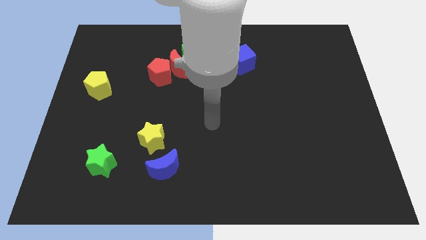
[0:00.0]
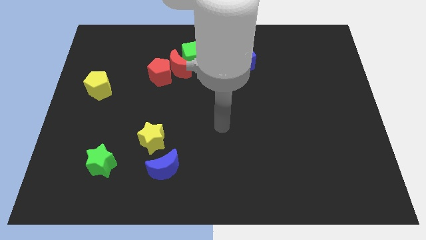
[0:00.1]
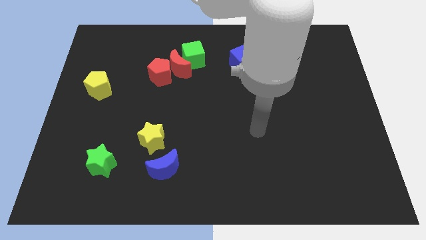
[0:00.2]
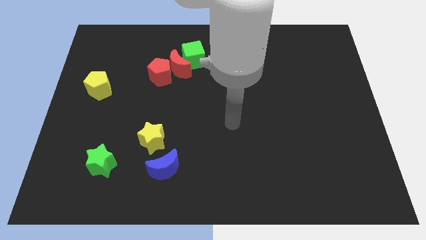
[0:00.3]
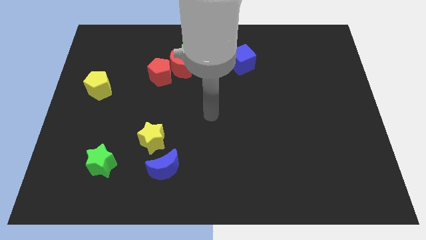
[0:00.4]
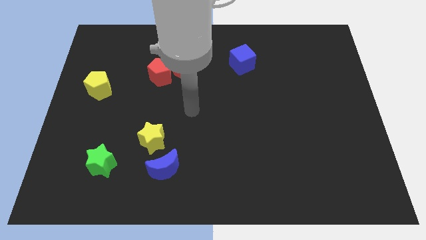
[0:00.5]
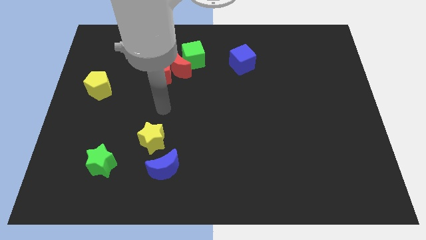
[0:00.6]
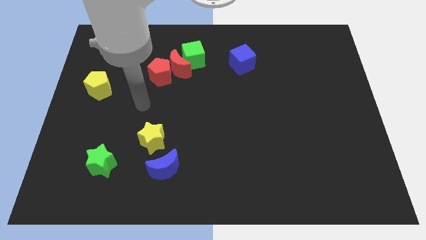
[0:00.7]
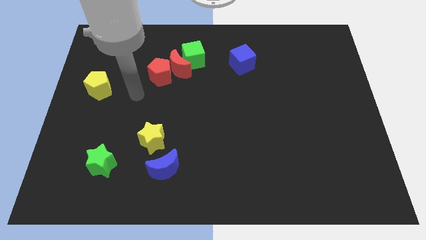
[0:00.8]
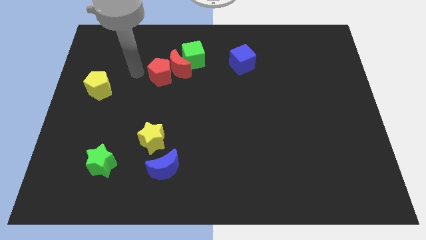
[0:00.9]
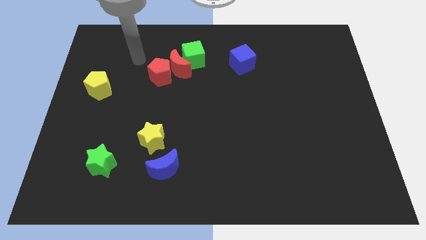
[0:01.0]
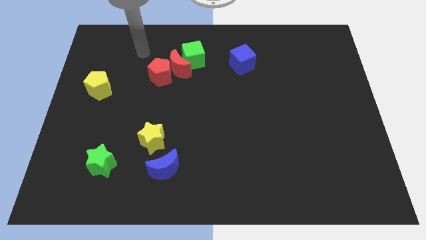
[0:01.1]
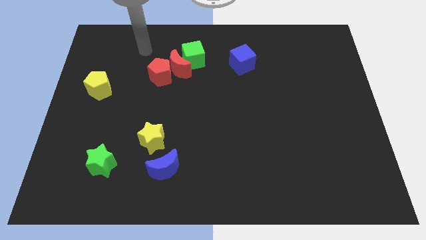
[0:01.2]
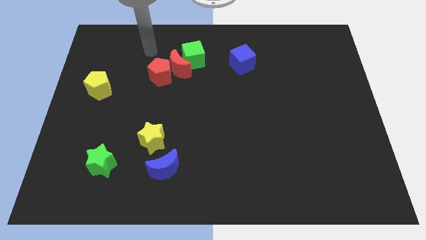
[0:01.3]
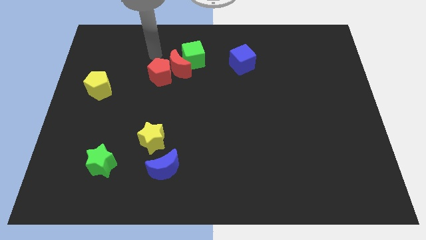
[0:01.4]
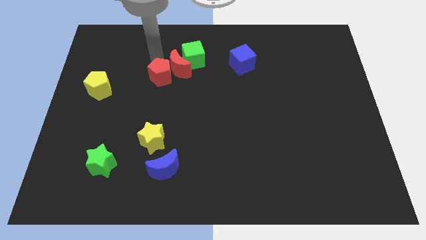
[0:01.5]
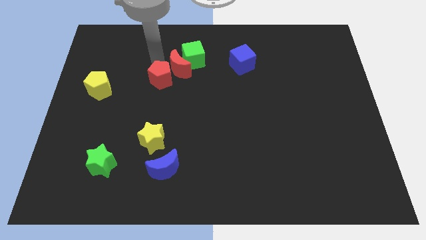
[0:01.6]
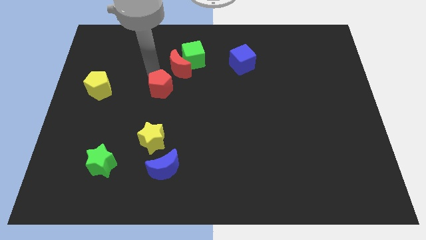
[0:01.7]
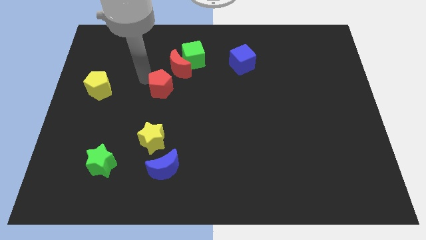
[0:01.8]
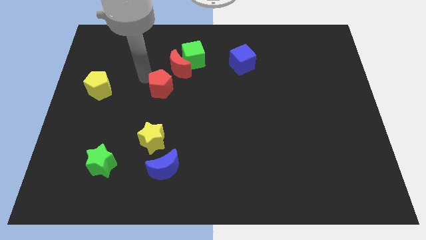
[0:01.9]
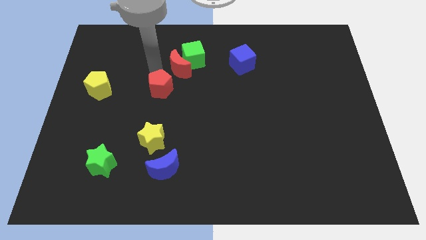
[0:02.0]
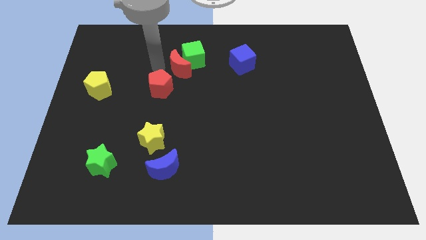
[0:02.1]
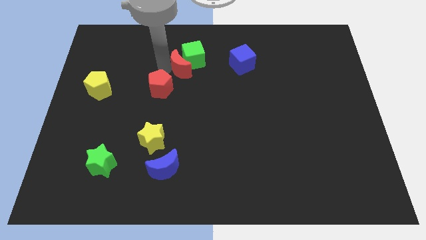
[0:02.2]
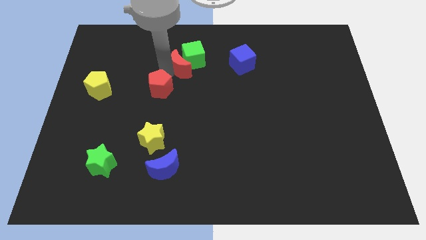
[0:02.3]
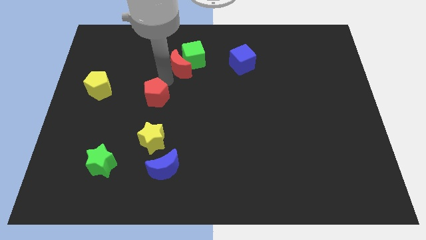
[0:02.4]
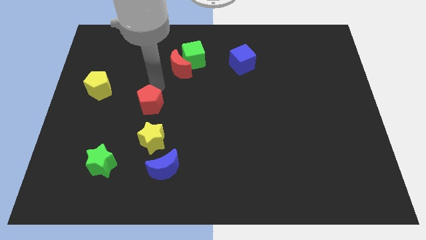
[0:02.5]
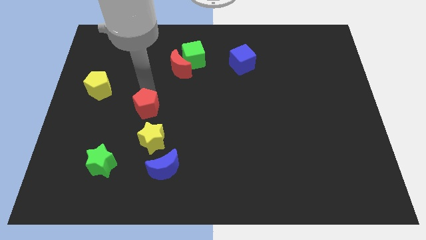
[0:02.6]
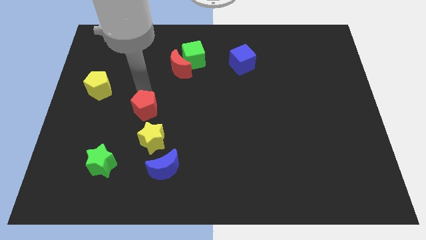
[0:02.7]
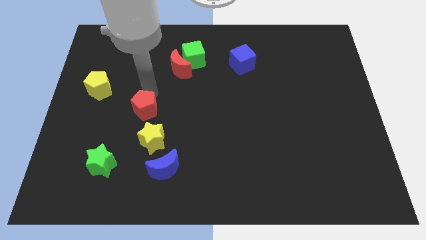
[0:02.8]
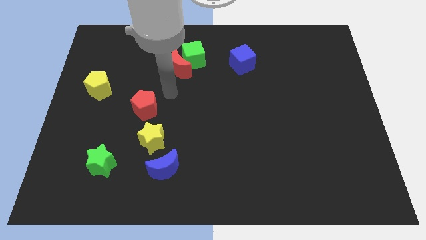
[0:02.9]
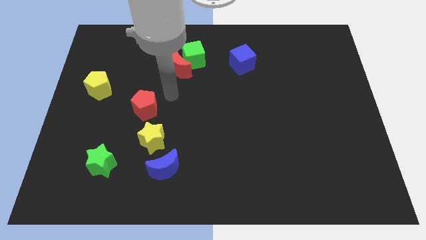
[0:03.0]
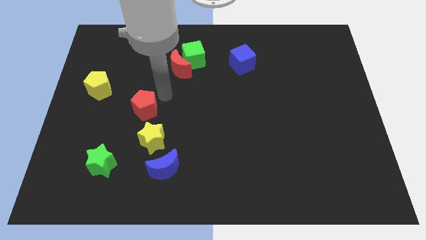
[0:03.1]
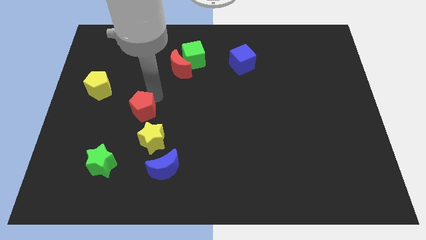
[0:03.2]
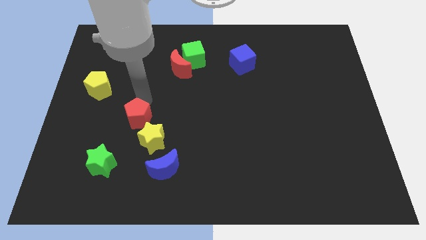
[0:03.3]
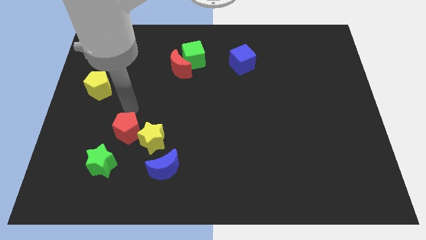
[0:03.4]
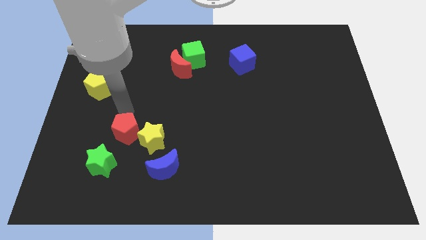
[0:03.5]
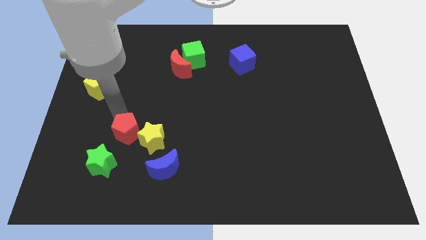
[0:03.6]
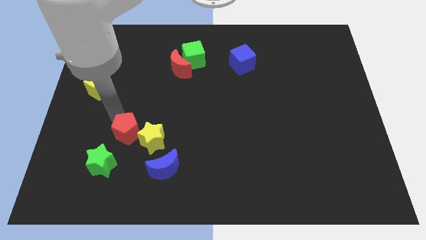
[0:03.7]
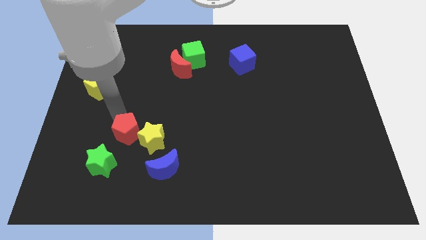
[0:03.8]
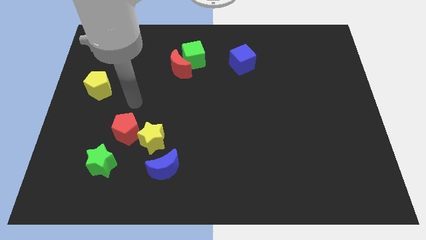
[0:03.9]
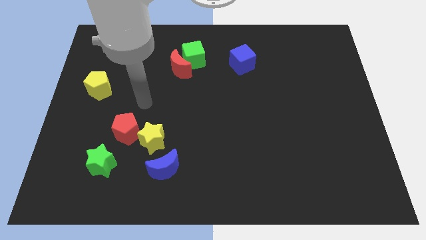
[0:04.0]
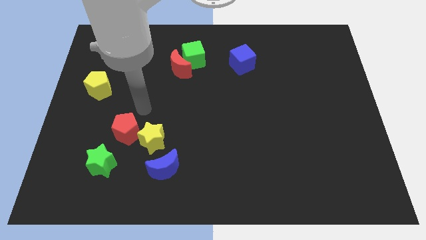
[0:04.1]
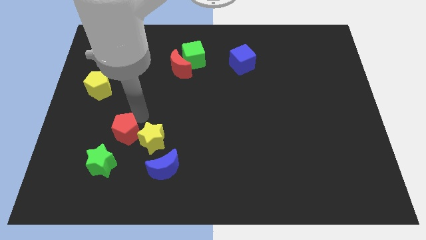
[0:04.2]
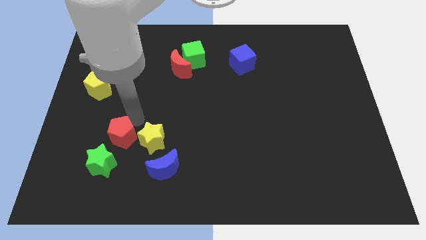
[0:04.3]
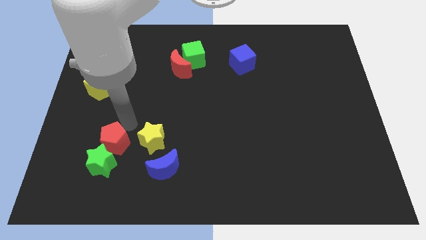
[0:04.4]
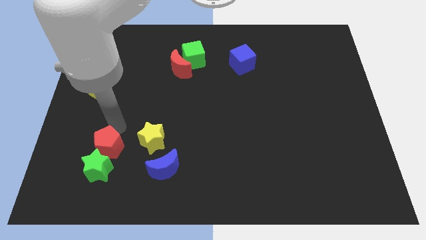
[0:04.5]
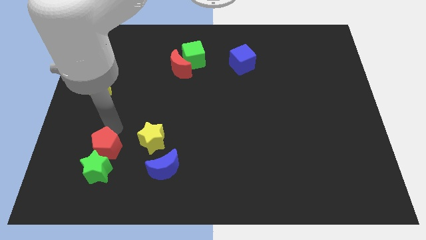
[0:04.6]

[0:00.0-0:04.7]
move the red pentagon close to the green star

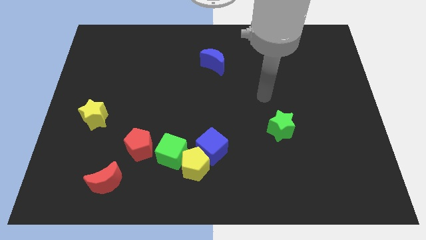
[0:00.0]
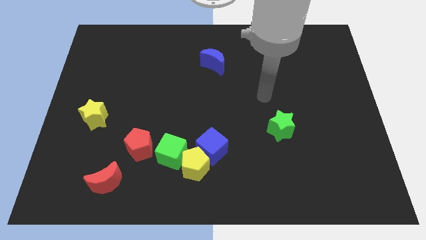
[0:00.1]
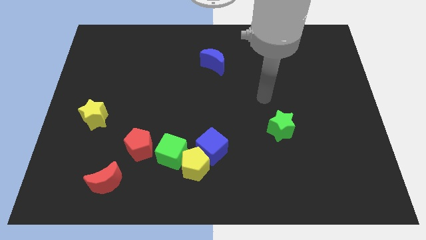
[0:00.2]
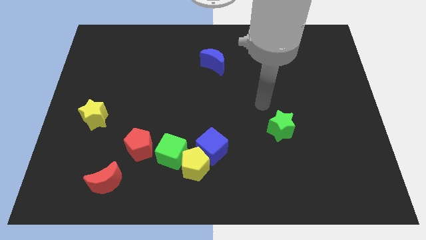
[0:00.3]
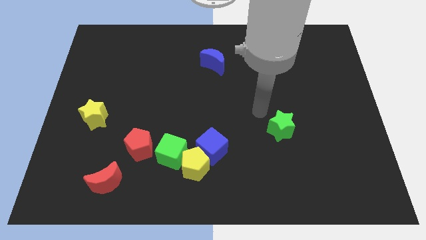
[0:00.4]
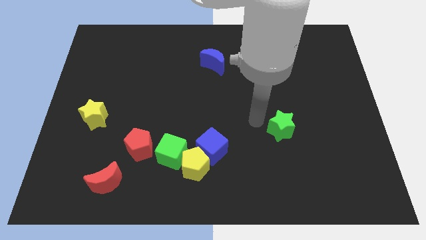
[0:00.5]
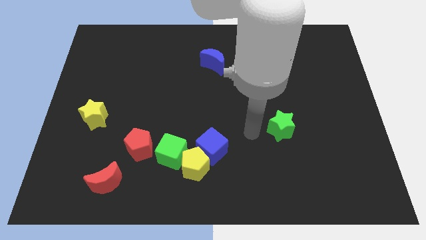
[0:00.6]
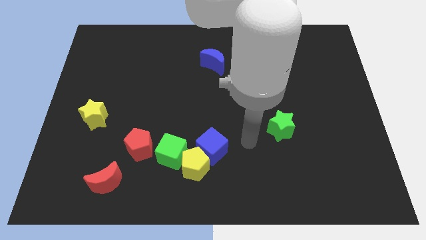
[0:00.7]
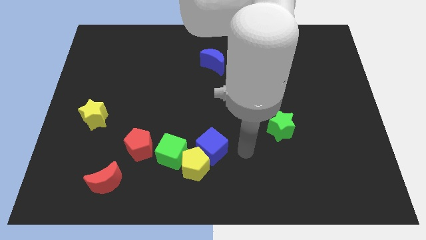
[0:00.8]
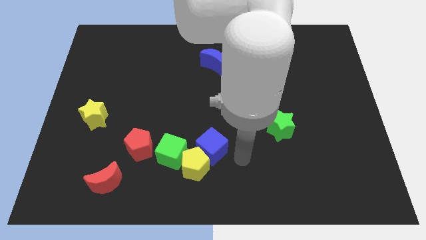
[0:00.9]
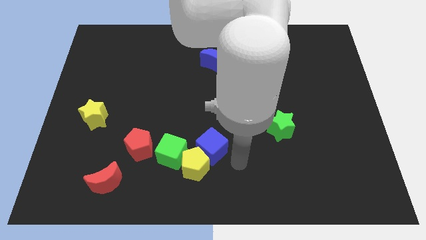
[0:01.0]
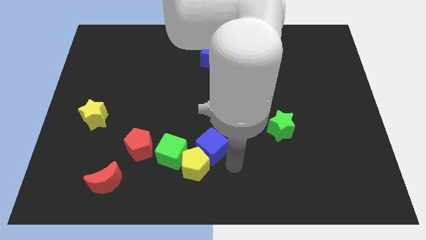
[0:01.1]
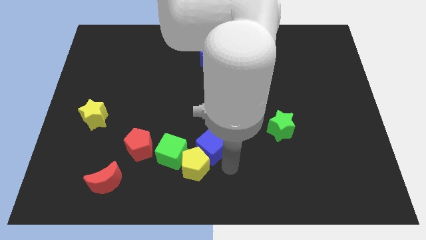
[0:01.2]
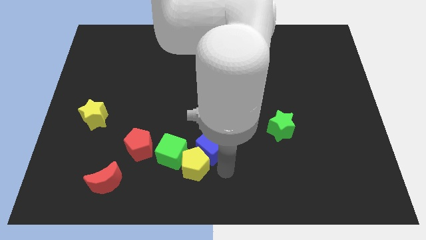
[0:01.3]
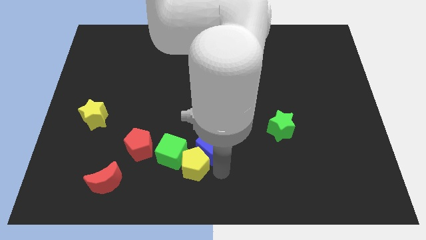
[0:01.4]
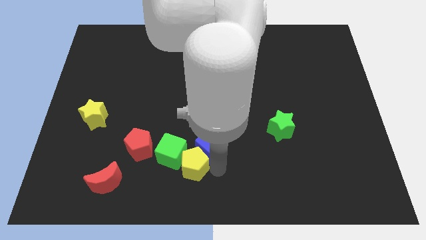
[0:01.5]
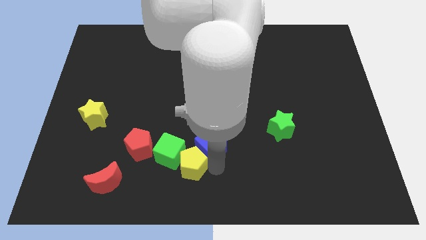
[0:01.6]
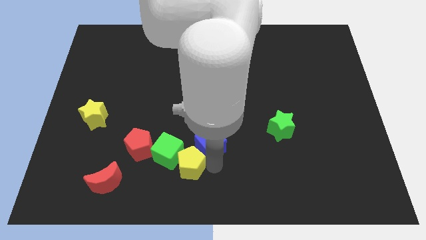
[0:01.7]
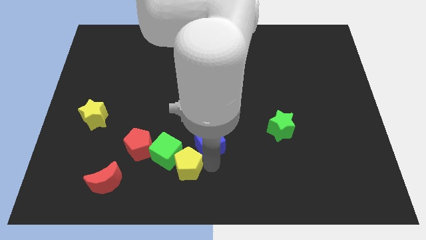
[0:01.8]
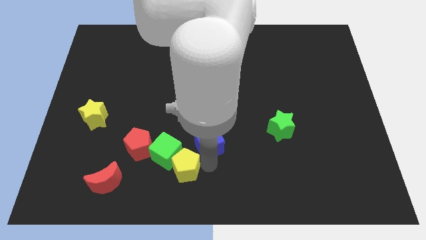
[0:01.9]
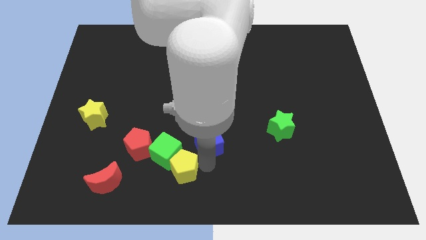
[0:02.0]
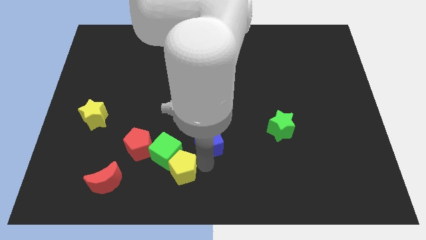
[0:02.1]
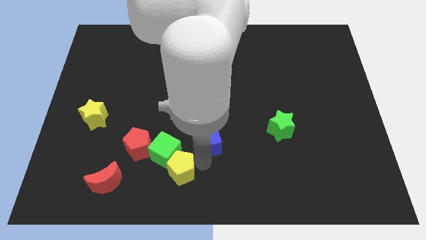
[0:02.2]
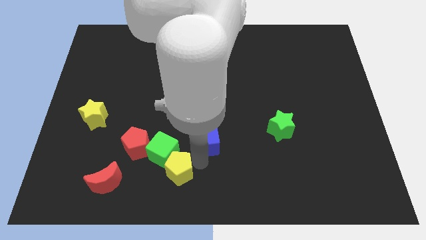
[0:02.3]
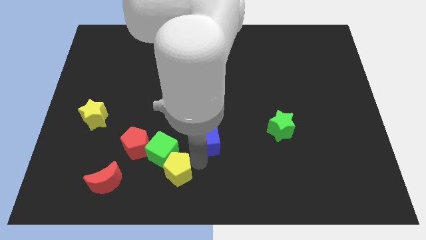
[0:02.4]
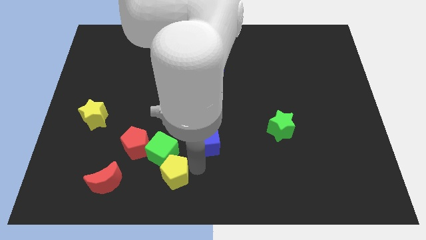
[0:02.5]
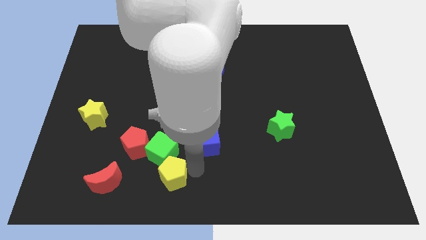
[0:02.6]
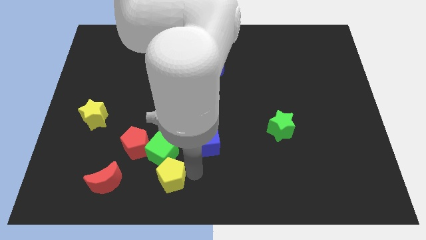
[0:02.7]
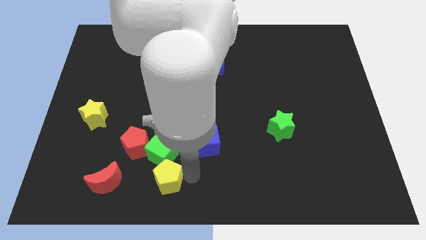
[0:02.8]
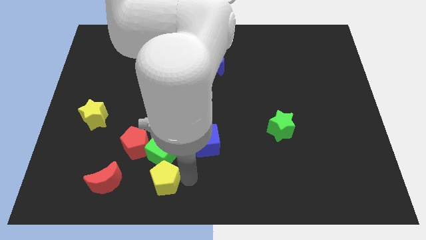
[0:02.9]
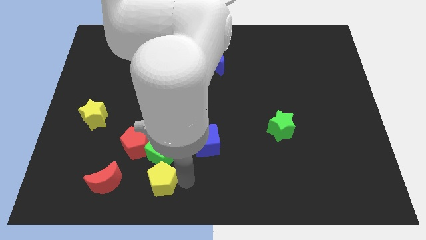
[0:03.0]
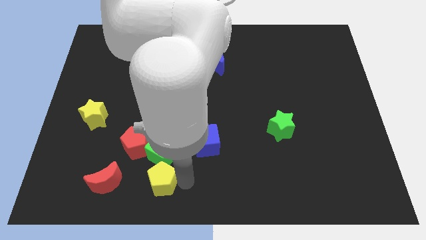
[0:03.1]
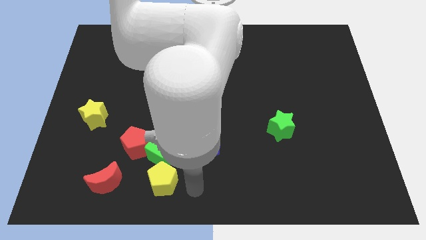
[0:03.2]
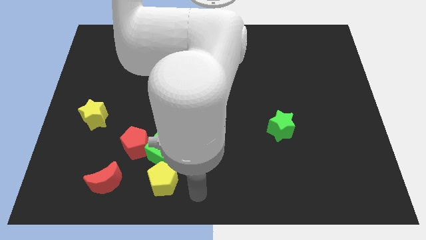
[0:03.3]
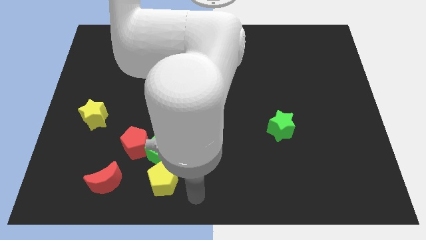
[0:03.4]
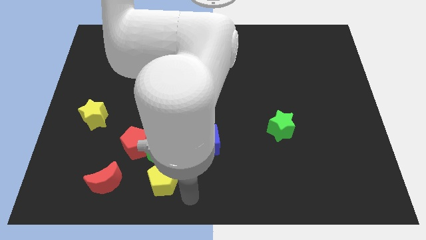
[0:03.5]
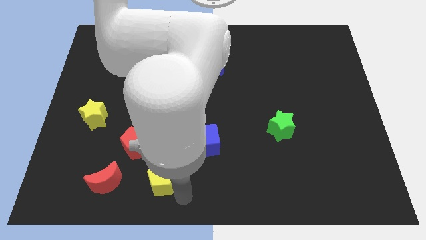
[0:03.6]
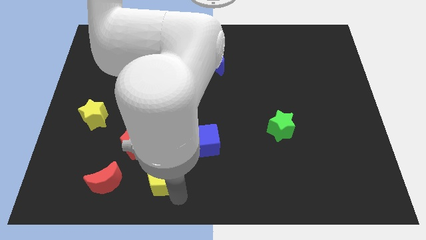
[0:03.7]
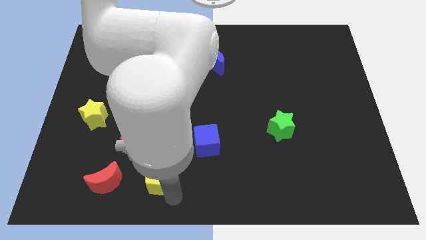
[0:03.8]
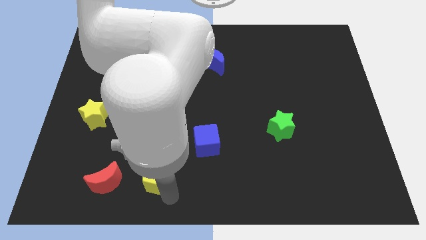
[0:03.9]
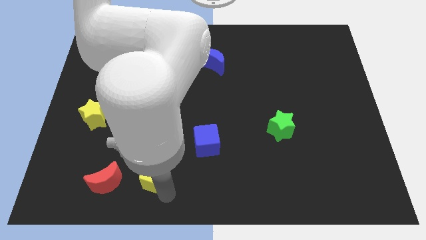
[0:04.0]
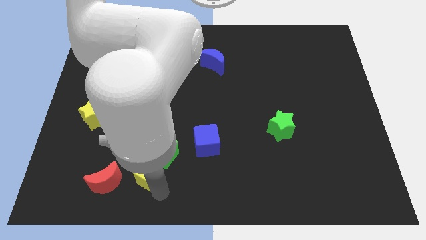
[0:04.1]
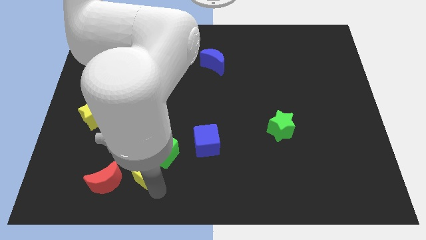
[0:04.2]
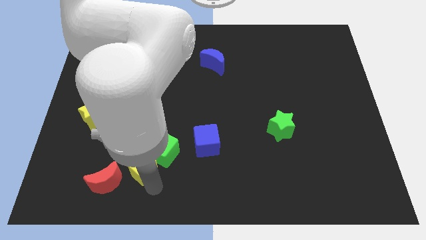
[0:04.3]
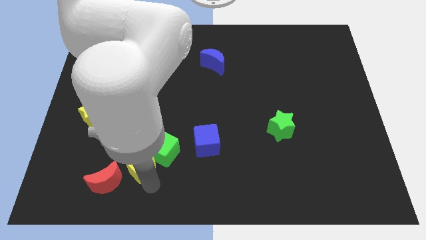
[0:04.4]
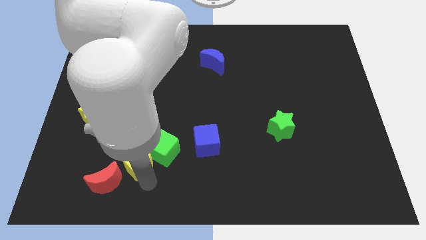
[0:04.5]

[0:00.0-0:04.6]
move the yellow pentagon towards the red pentagon
